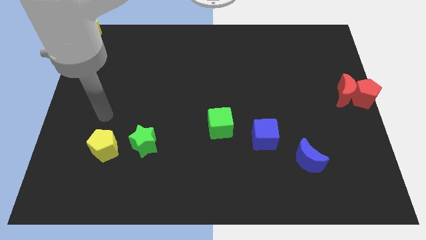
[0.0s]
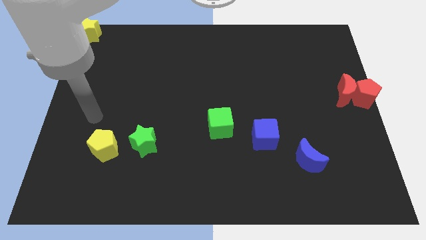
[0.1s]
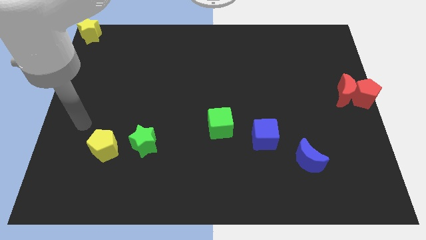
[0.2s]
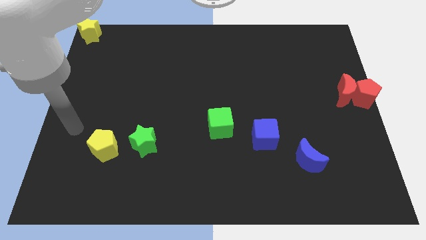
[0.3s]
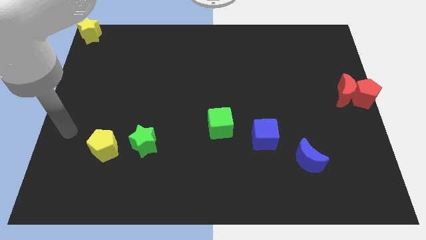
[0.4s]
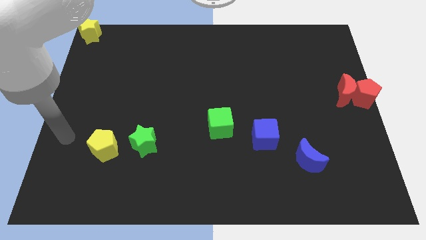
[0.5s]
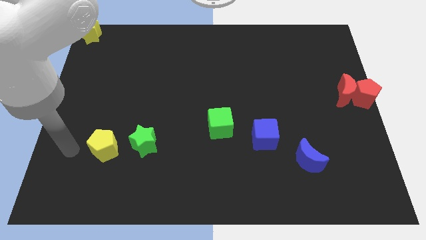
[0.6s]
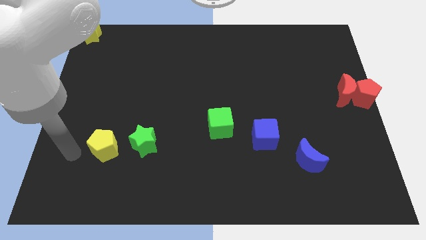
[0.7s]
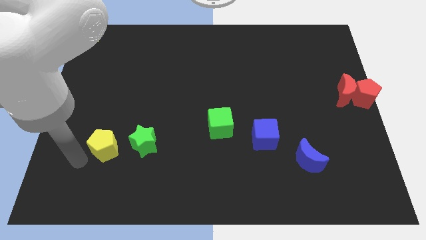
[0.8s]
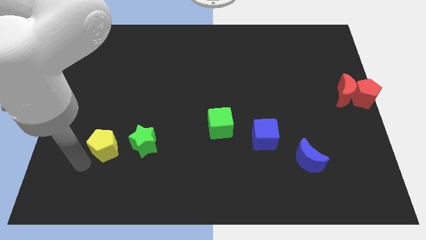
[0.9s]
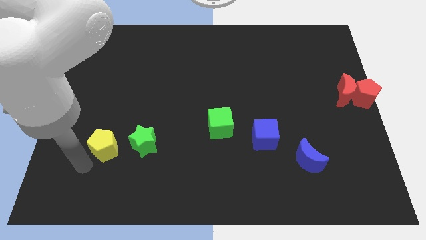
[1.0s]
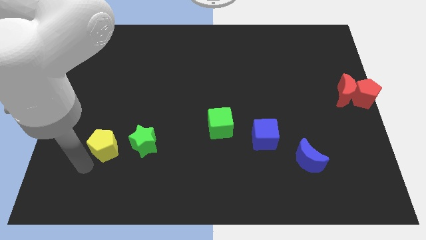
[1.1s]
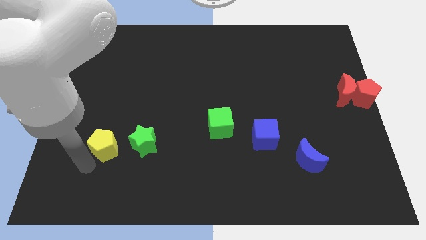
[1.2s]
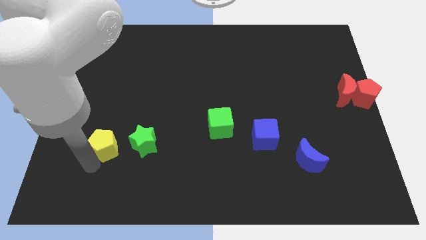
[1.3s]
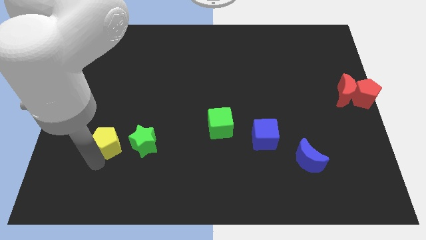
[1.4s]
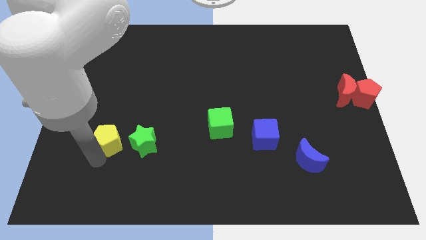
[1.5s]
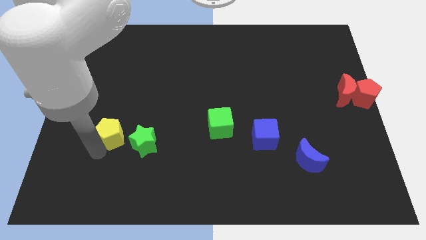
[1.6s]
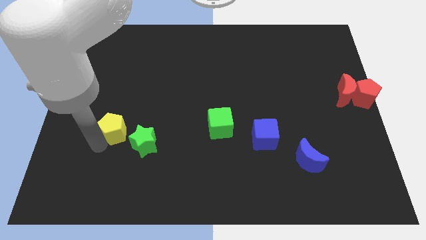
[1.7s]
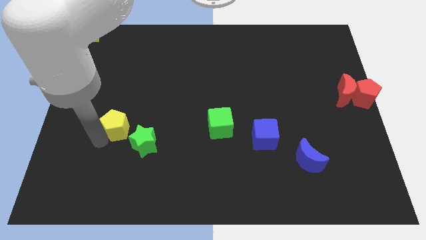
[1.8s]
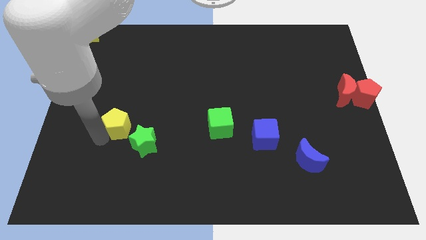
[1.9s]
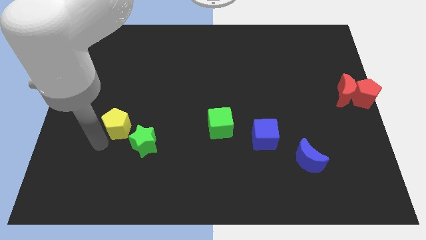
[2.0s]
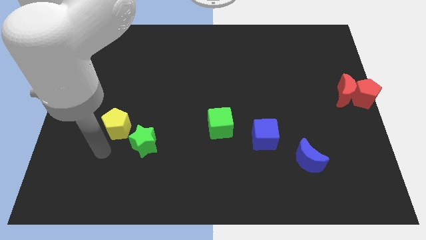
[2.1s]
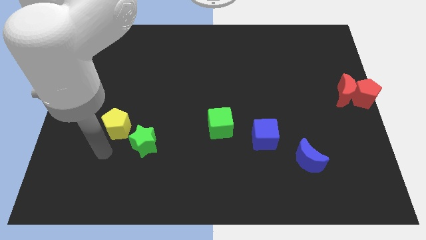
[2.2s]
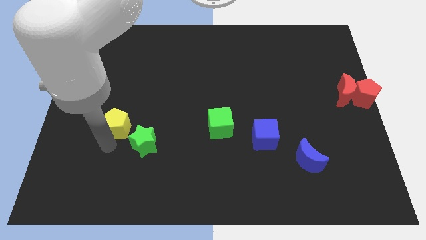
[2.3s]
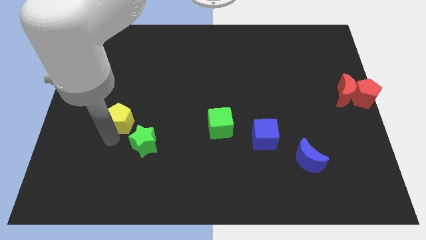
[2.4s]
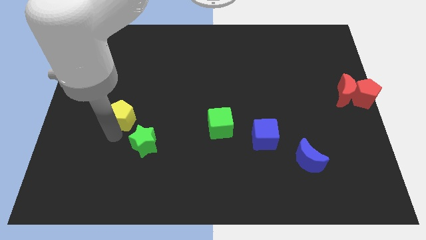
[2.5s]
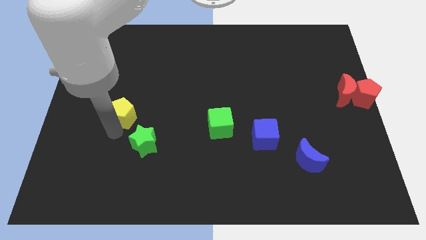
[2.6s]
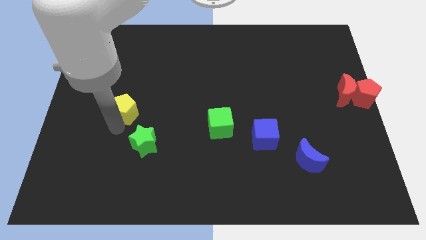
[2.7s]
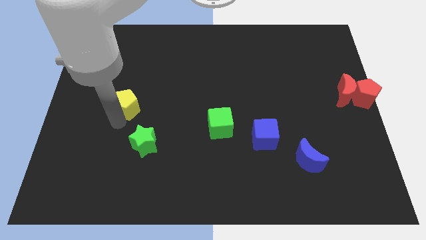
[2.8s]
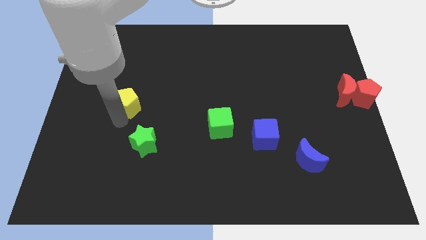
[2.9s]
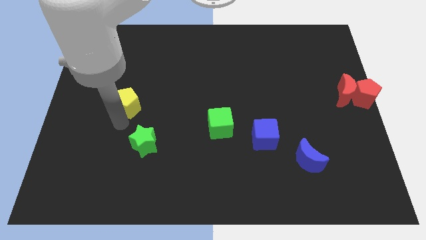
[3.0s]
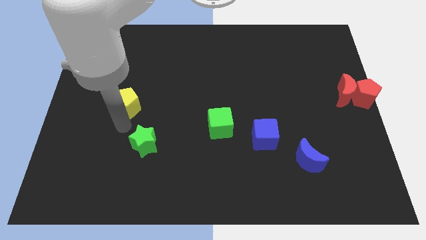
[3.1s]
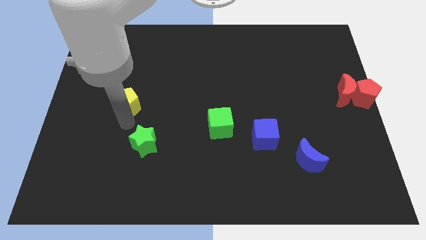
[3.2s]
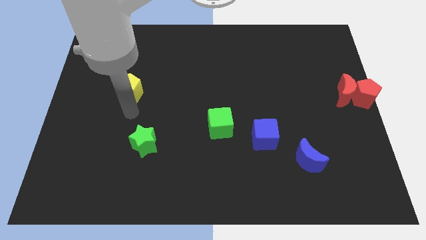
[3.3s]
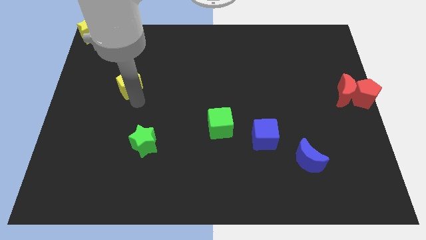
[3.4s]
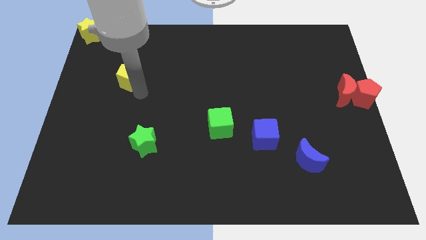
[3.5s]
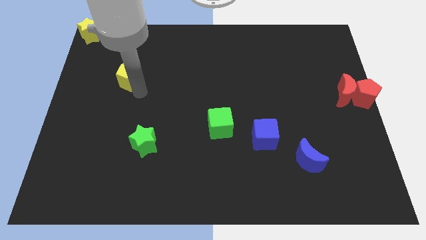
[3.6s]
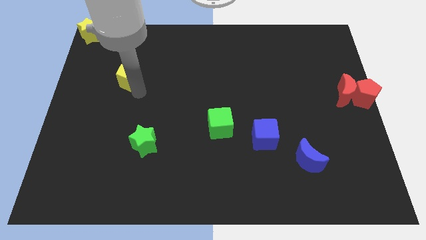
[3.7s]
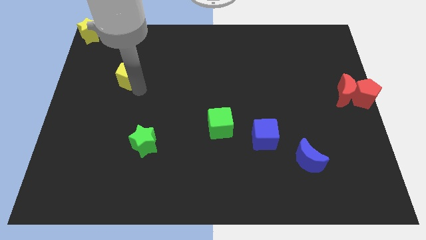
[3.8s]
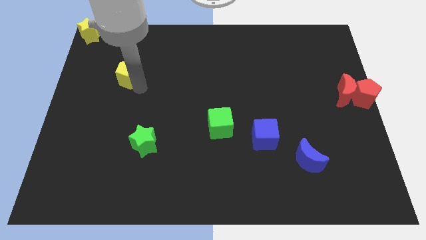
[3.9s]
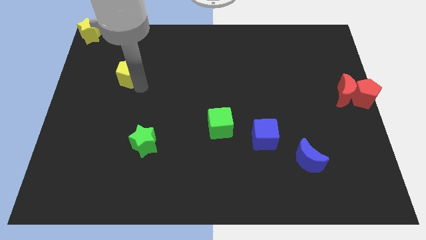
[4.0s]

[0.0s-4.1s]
separate yellow pentagon from green star

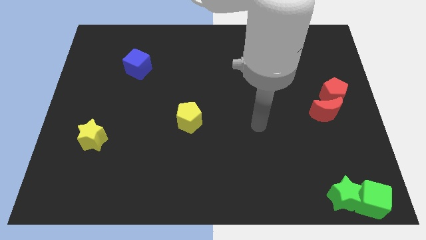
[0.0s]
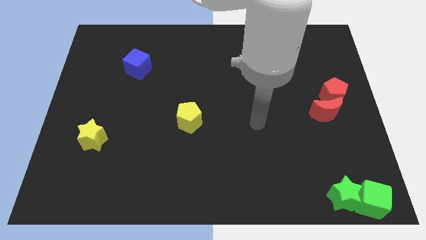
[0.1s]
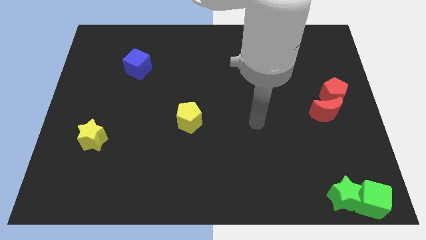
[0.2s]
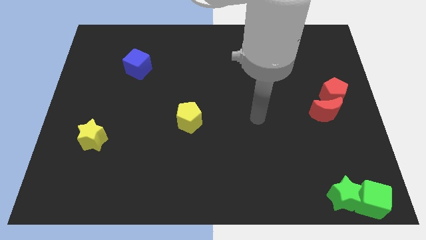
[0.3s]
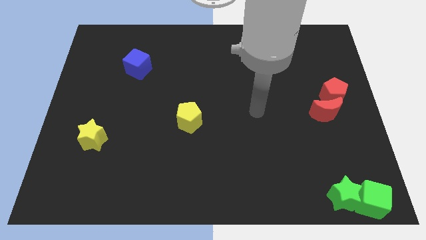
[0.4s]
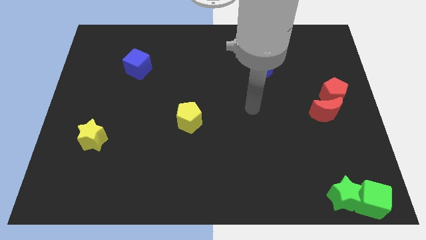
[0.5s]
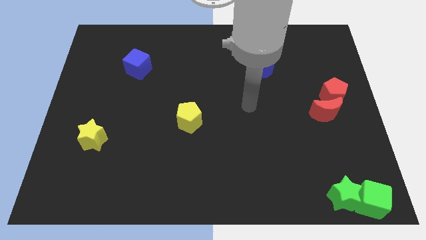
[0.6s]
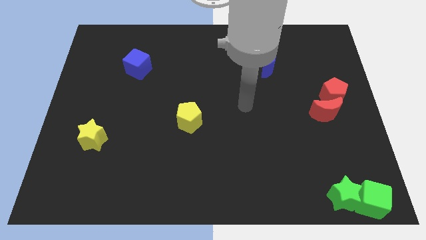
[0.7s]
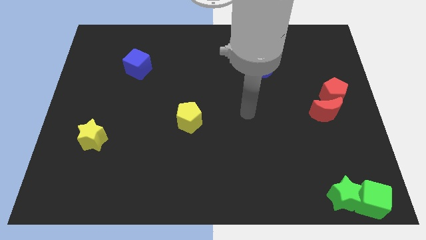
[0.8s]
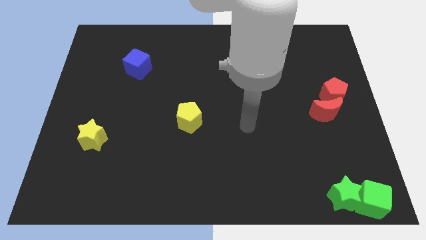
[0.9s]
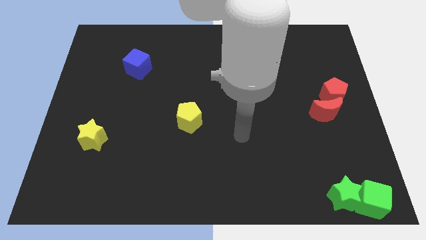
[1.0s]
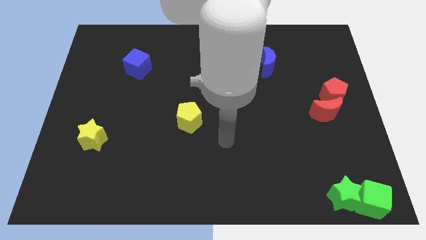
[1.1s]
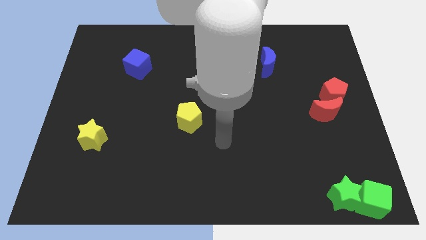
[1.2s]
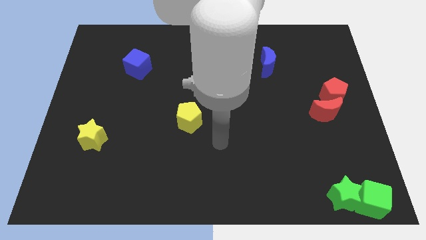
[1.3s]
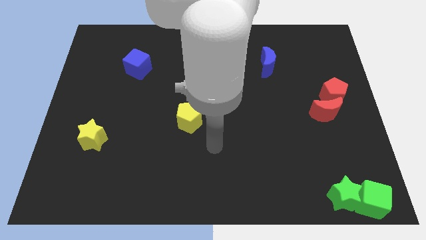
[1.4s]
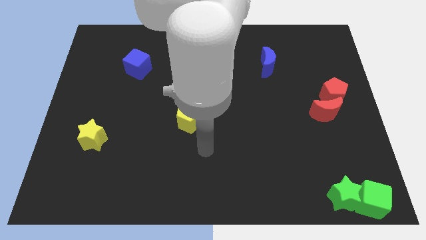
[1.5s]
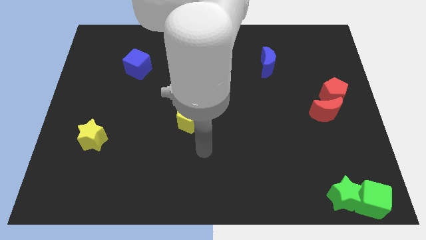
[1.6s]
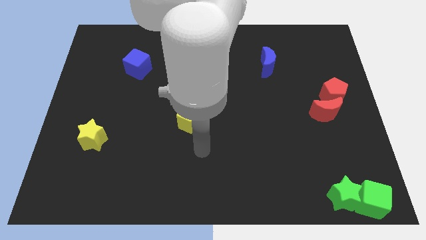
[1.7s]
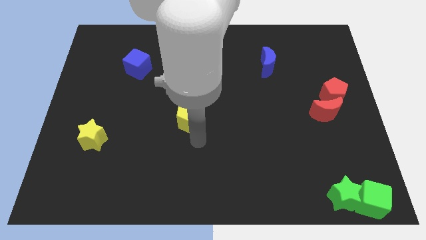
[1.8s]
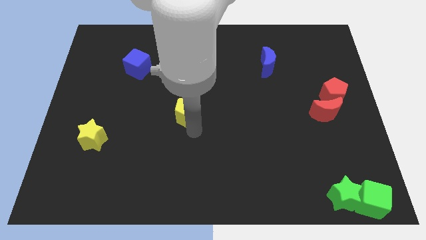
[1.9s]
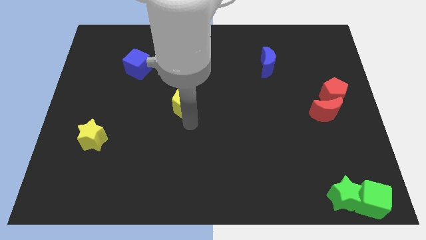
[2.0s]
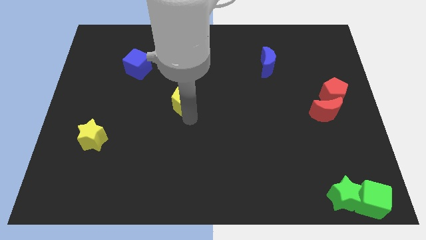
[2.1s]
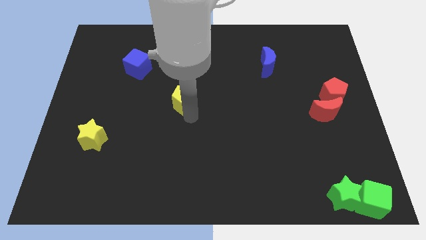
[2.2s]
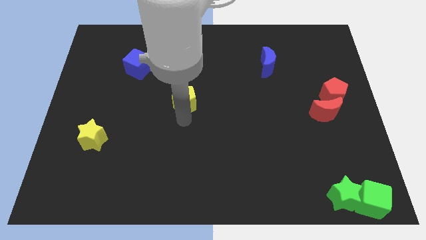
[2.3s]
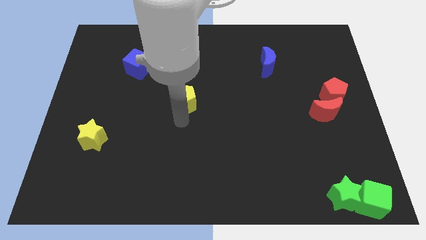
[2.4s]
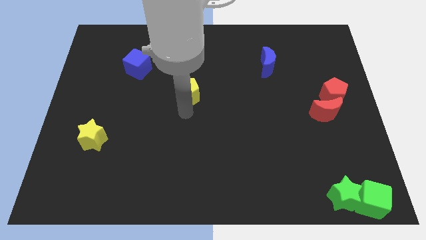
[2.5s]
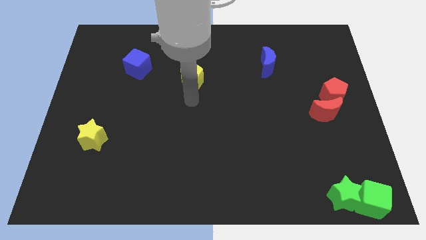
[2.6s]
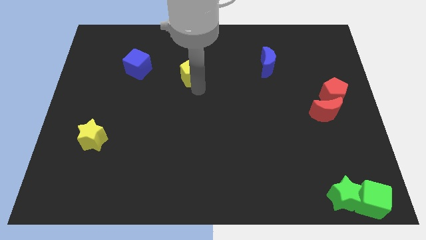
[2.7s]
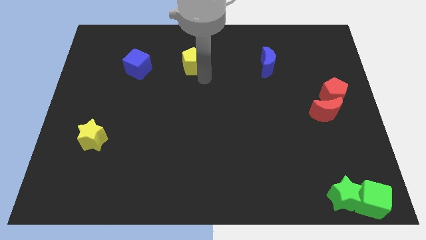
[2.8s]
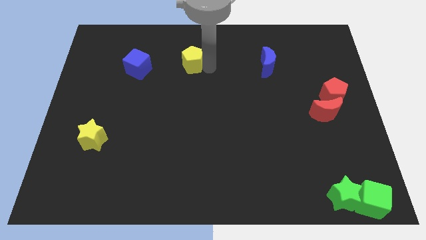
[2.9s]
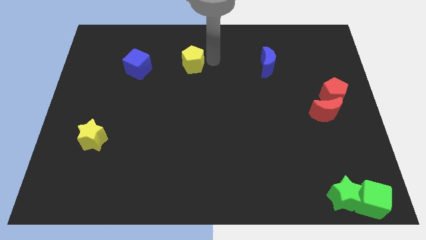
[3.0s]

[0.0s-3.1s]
place the yellow pentagon right to the blue cube

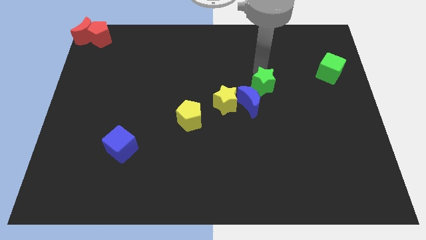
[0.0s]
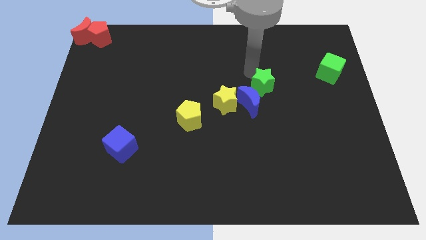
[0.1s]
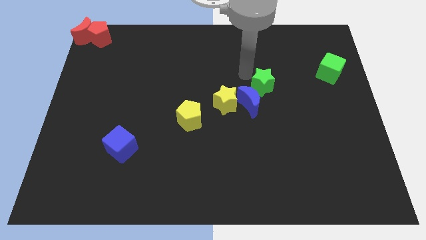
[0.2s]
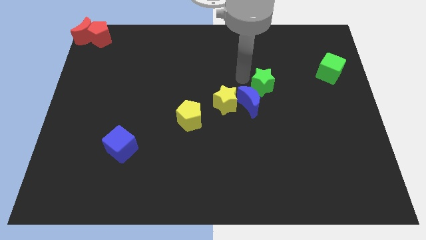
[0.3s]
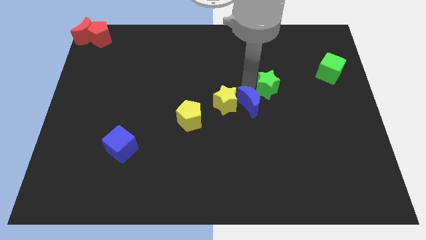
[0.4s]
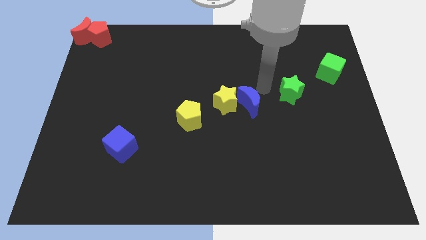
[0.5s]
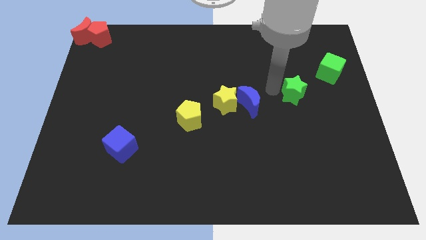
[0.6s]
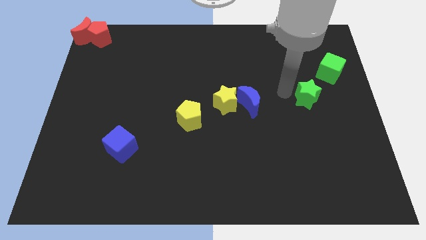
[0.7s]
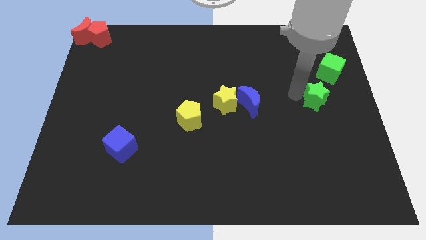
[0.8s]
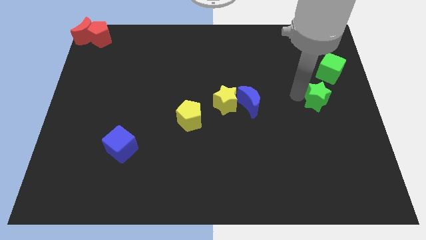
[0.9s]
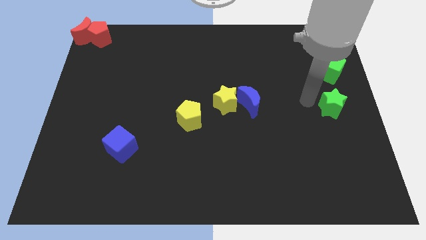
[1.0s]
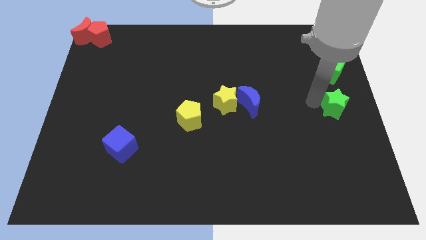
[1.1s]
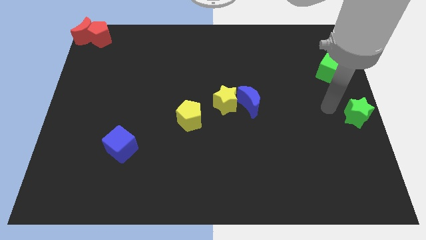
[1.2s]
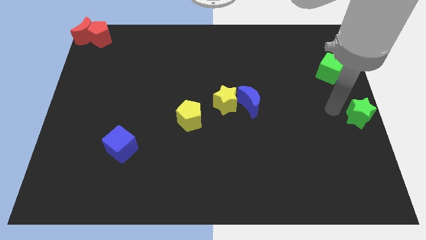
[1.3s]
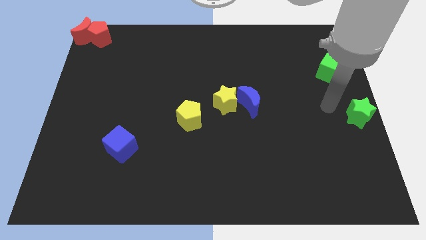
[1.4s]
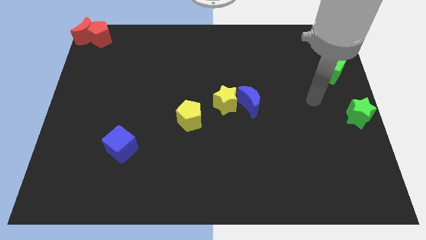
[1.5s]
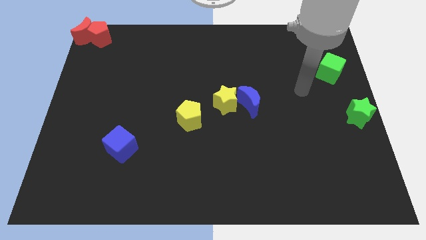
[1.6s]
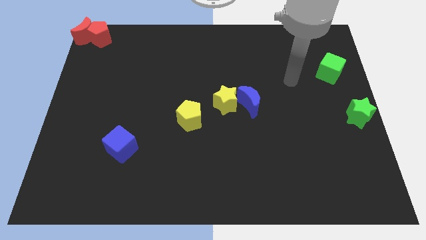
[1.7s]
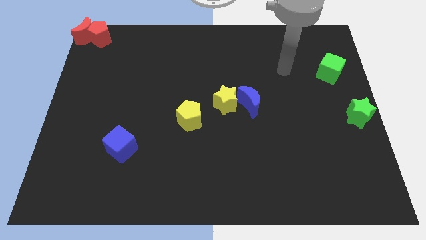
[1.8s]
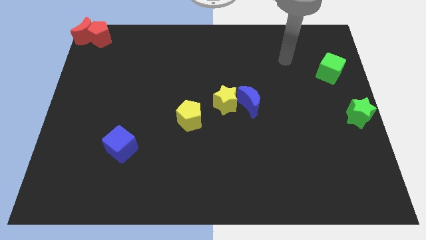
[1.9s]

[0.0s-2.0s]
push the green star to the right center of the board
